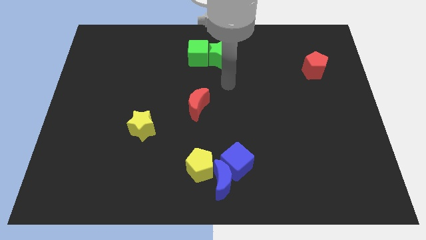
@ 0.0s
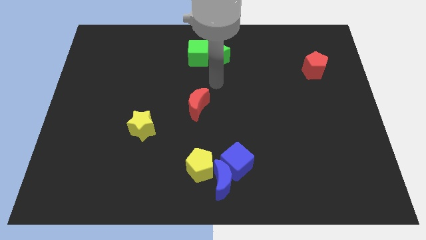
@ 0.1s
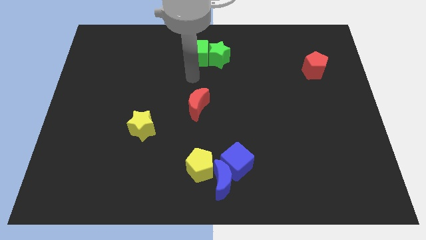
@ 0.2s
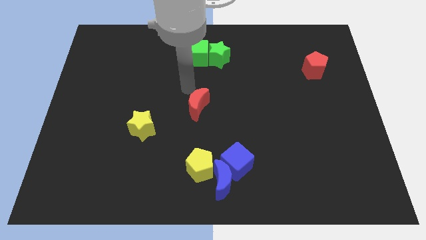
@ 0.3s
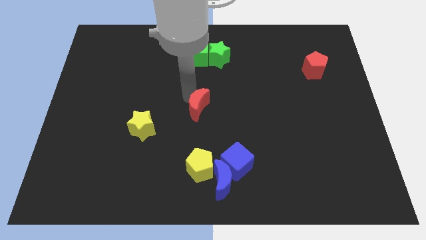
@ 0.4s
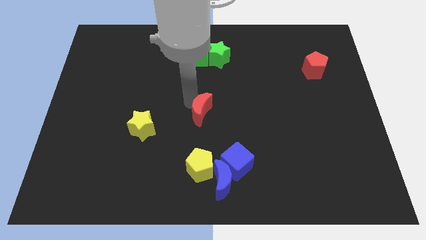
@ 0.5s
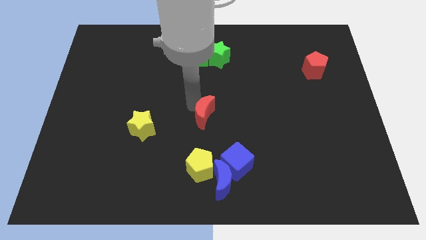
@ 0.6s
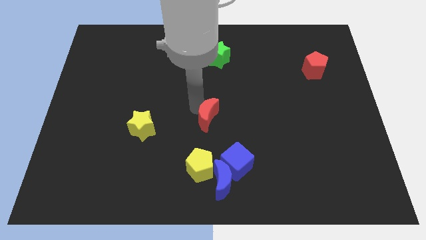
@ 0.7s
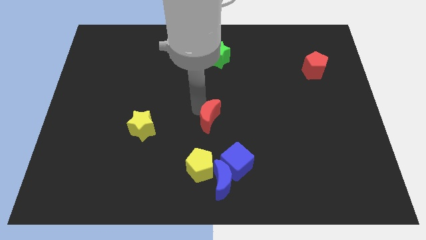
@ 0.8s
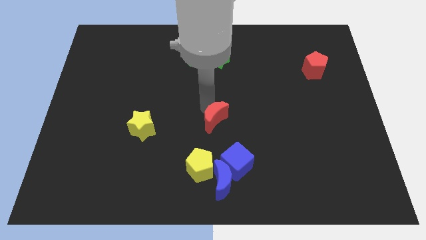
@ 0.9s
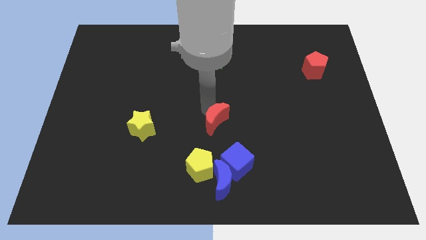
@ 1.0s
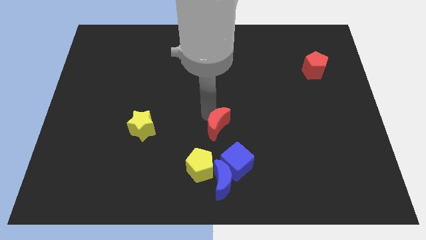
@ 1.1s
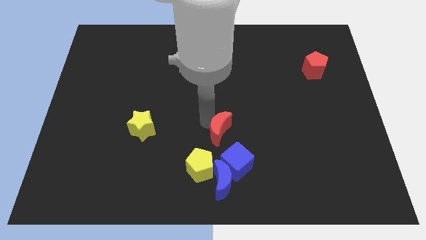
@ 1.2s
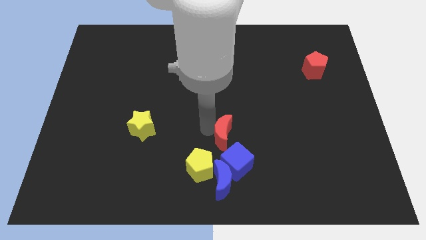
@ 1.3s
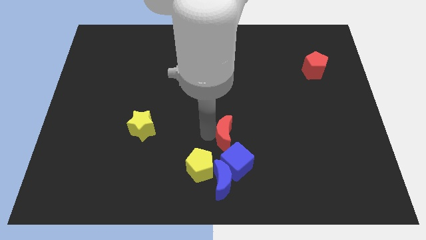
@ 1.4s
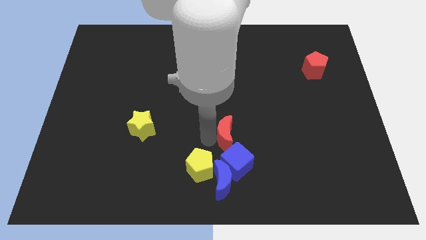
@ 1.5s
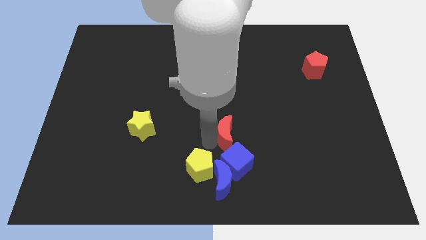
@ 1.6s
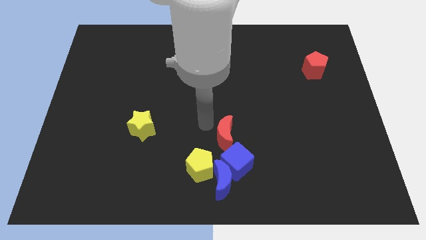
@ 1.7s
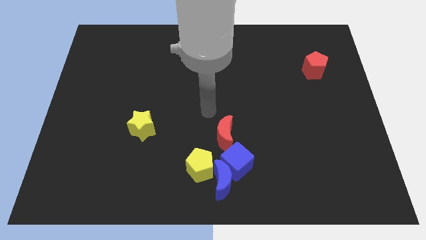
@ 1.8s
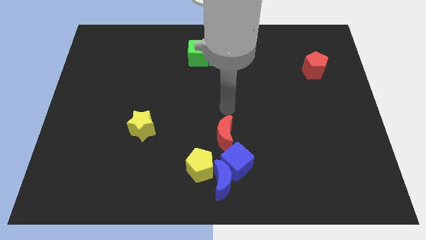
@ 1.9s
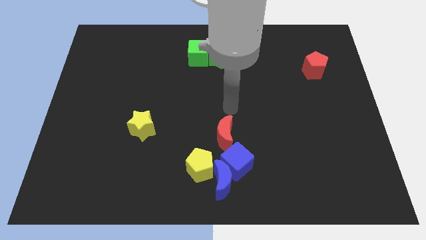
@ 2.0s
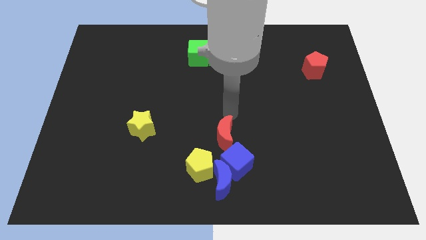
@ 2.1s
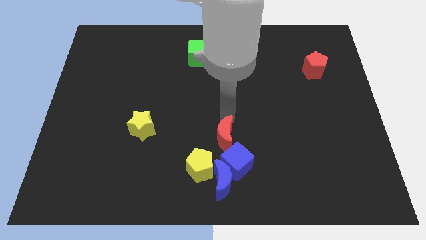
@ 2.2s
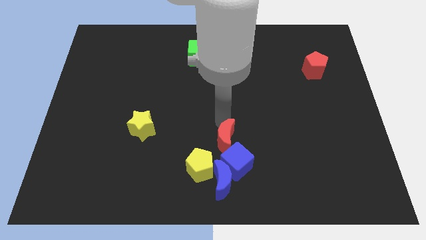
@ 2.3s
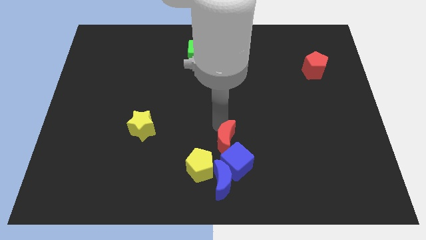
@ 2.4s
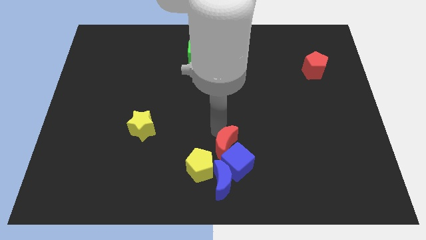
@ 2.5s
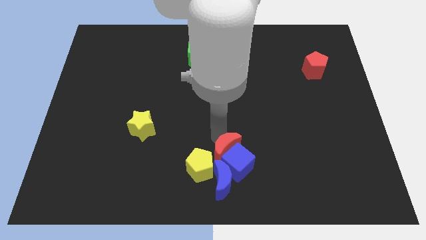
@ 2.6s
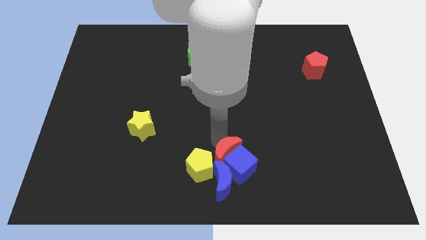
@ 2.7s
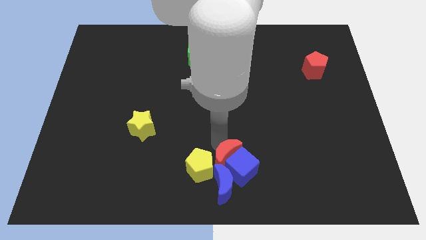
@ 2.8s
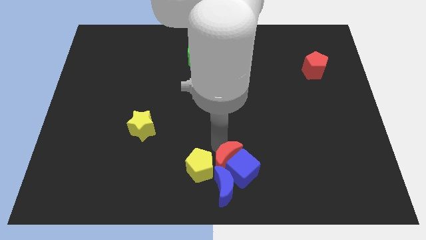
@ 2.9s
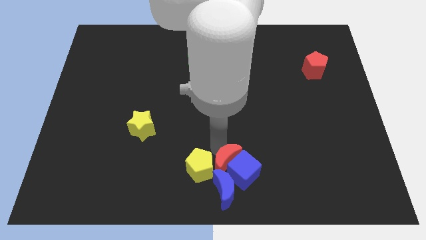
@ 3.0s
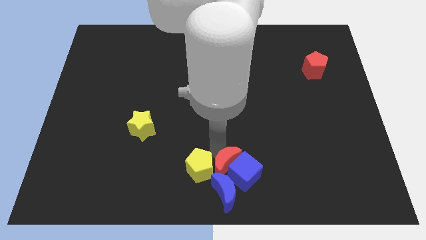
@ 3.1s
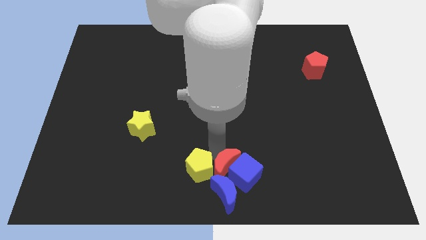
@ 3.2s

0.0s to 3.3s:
push the red moon next to the blue moon

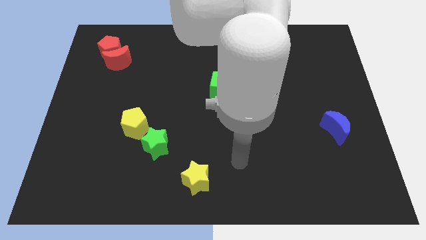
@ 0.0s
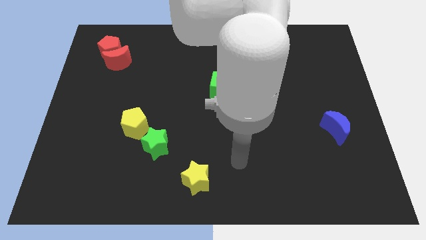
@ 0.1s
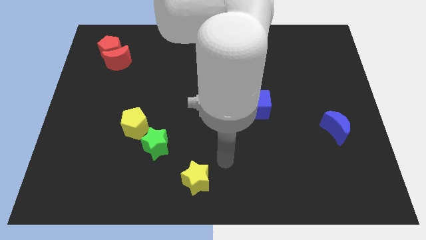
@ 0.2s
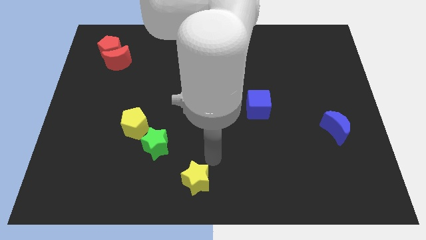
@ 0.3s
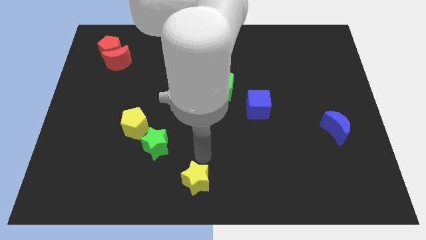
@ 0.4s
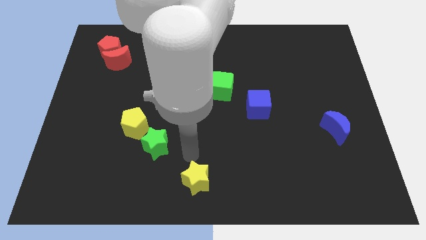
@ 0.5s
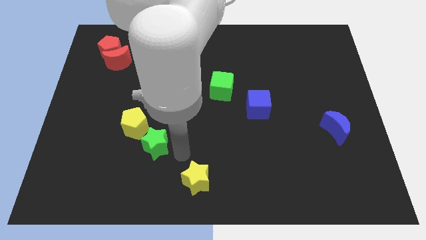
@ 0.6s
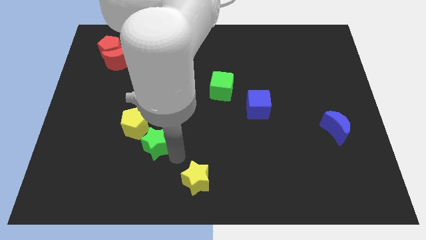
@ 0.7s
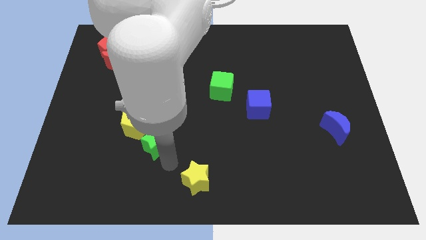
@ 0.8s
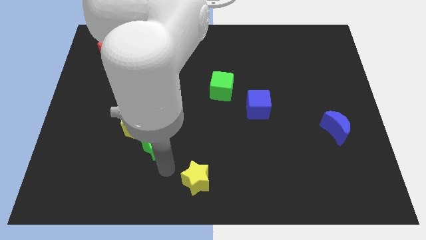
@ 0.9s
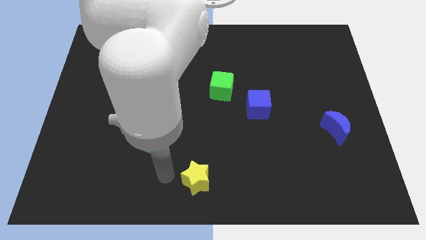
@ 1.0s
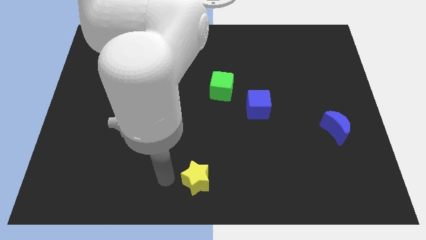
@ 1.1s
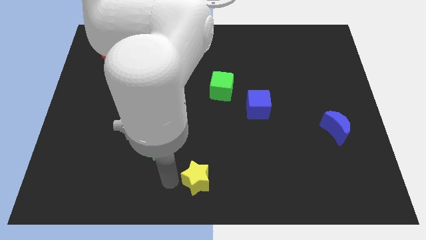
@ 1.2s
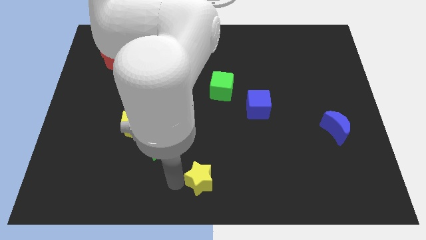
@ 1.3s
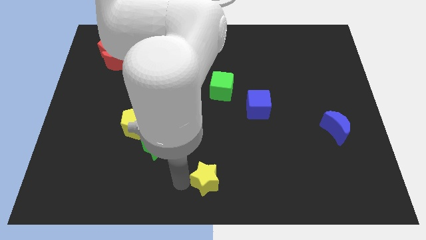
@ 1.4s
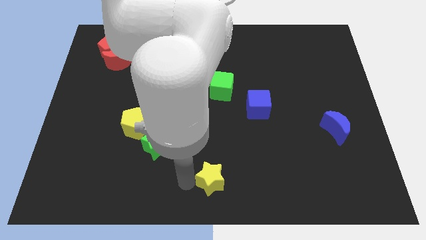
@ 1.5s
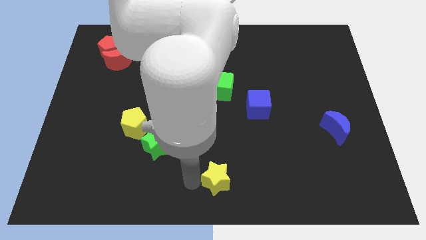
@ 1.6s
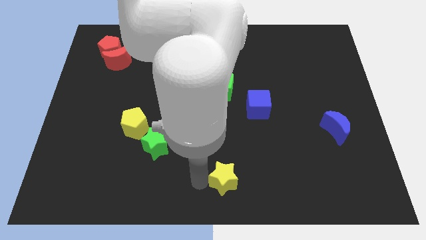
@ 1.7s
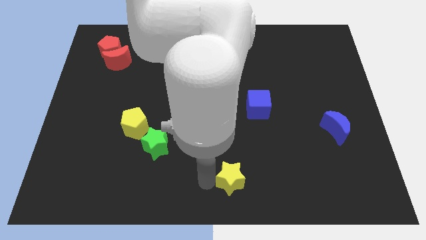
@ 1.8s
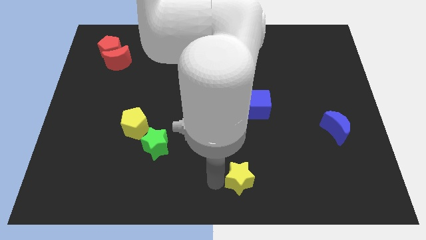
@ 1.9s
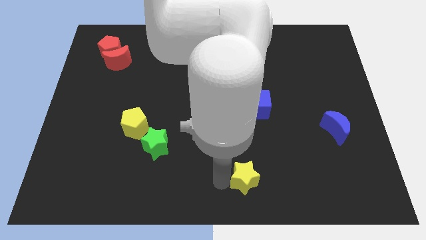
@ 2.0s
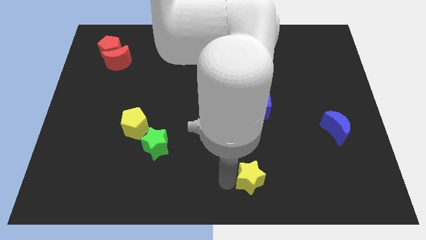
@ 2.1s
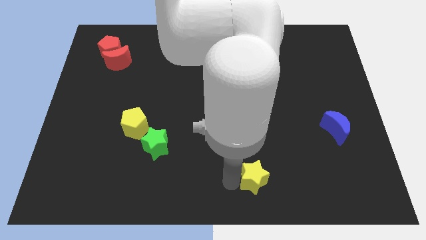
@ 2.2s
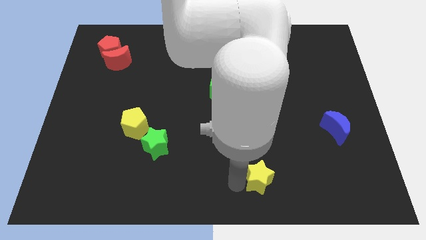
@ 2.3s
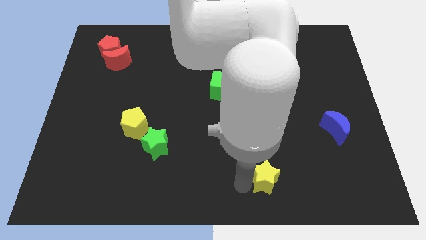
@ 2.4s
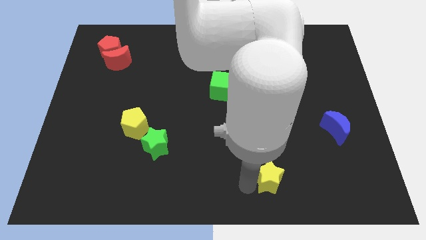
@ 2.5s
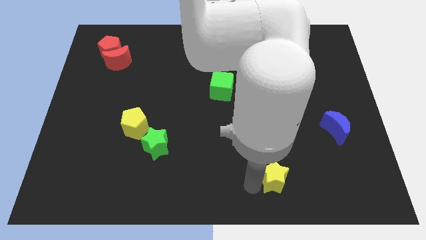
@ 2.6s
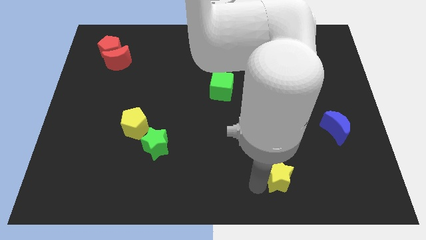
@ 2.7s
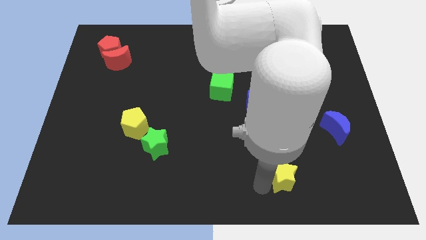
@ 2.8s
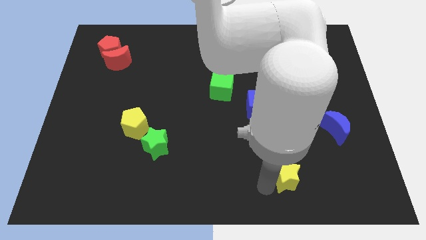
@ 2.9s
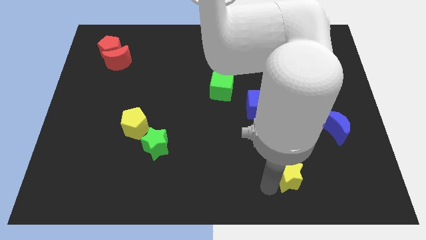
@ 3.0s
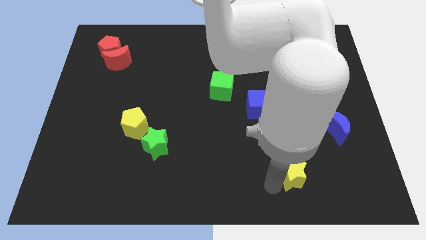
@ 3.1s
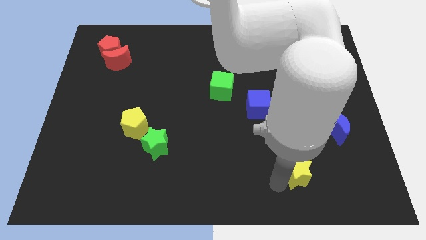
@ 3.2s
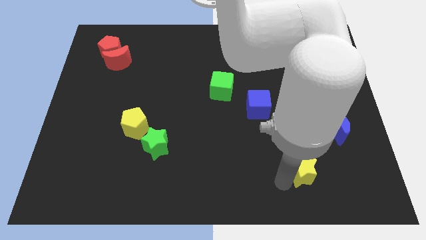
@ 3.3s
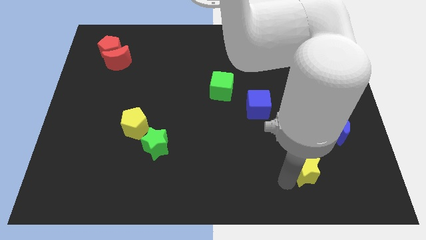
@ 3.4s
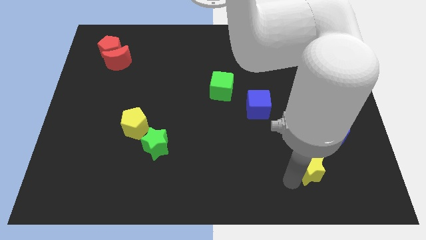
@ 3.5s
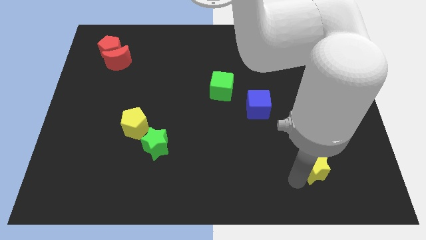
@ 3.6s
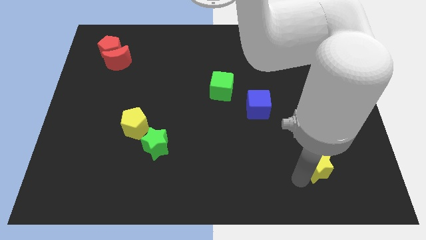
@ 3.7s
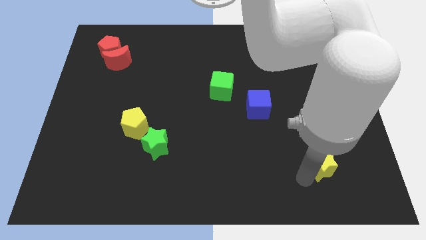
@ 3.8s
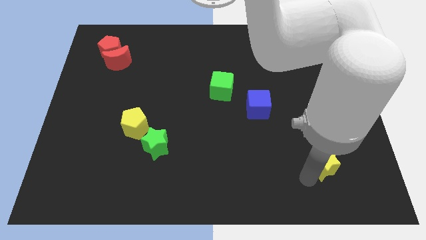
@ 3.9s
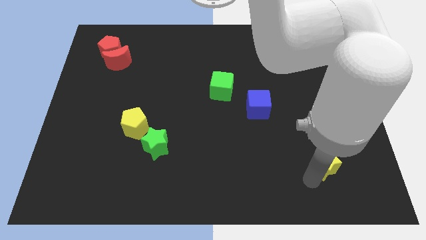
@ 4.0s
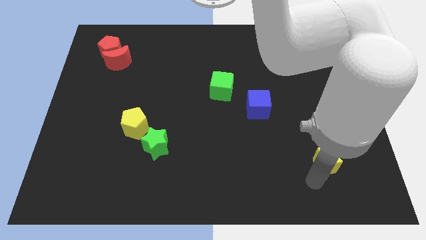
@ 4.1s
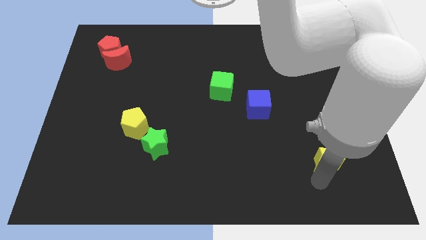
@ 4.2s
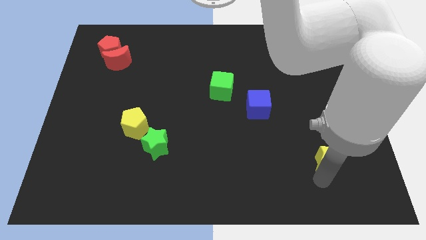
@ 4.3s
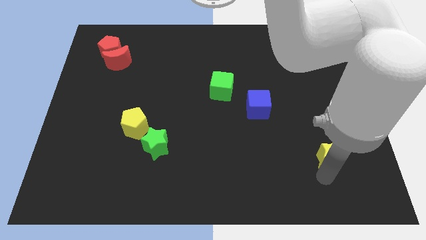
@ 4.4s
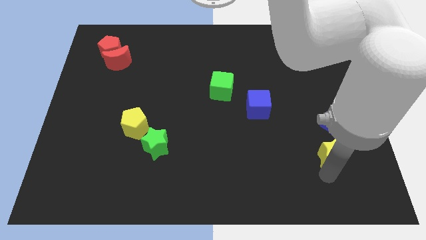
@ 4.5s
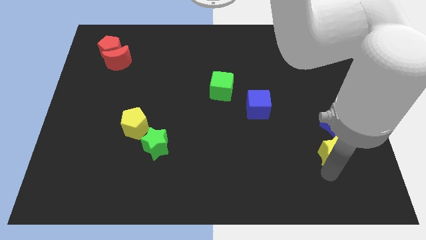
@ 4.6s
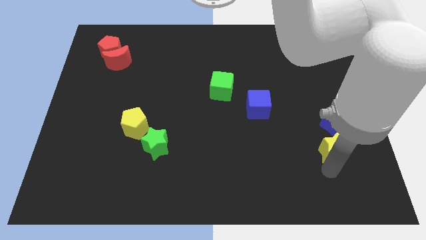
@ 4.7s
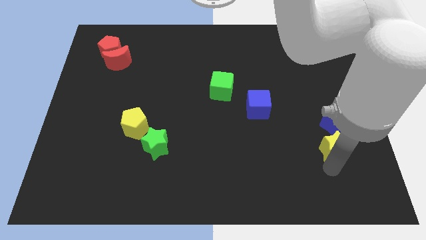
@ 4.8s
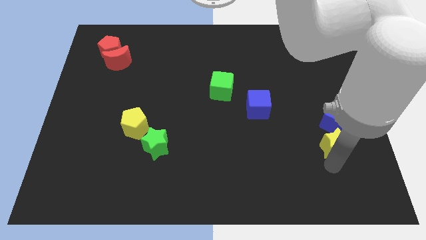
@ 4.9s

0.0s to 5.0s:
push the yellow star close to the blue moon

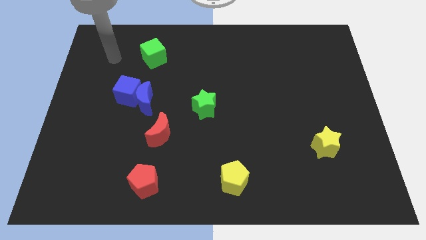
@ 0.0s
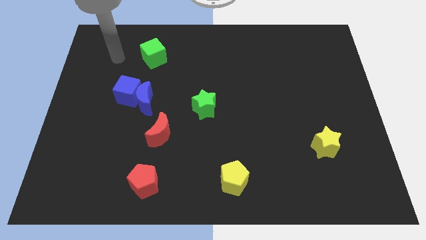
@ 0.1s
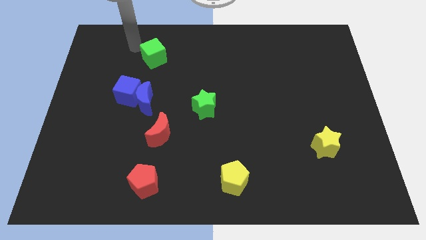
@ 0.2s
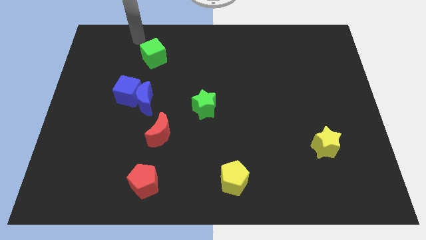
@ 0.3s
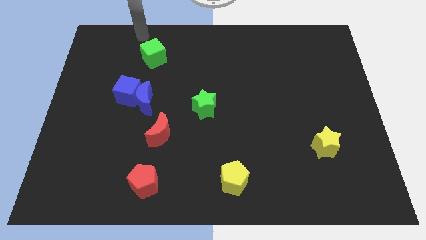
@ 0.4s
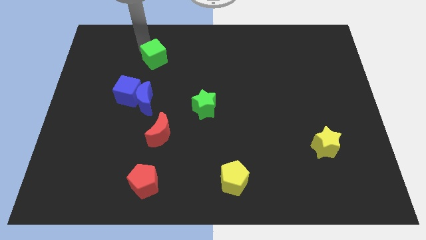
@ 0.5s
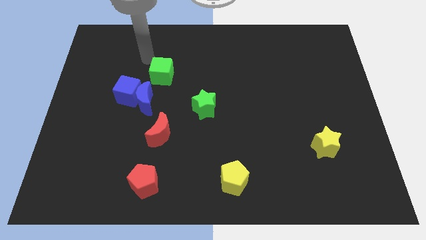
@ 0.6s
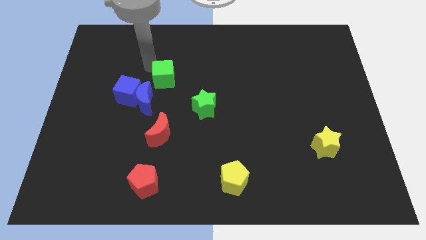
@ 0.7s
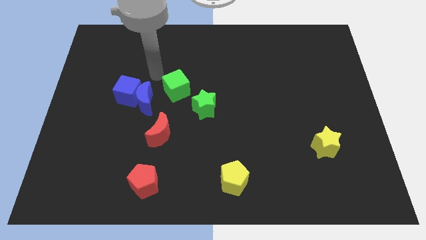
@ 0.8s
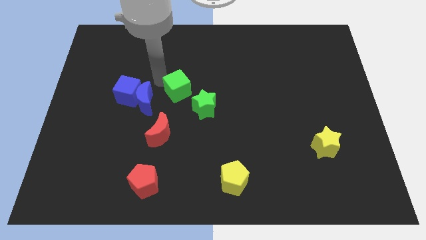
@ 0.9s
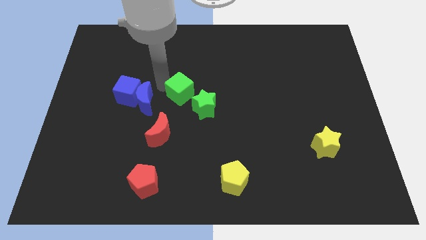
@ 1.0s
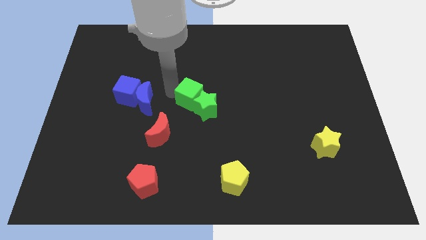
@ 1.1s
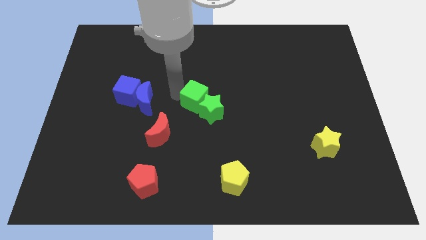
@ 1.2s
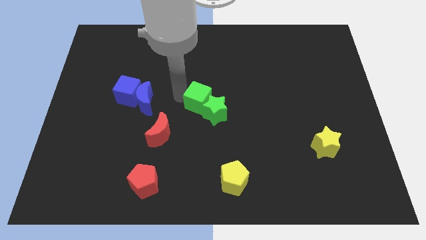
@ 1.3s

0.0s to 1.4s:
move the green cube to the green star
